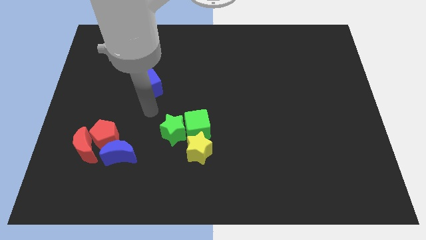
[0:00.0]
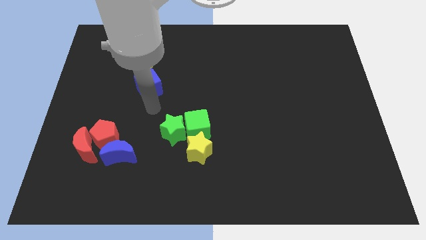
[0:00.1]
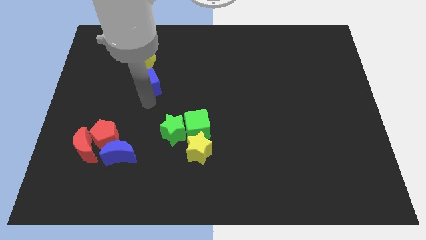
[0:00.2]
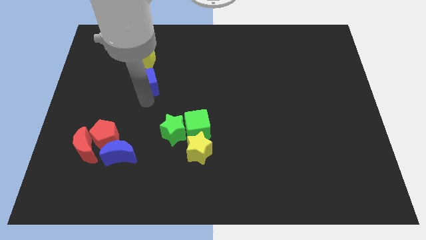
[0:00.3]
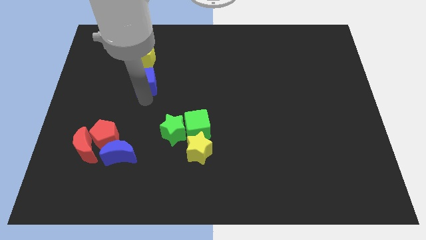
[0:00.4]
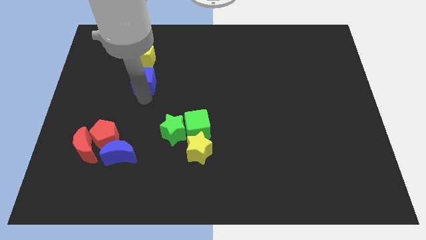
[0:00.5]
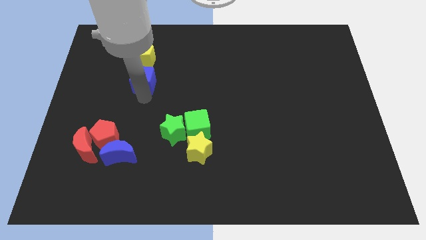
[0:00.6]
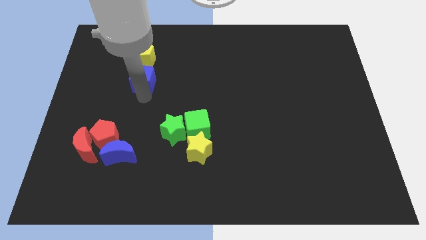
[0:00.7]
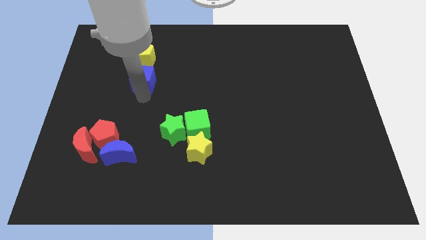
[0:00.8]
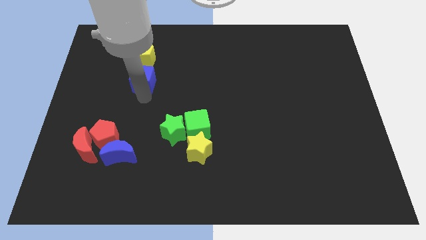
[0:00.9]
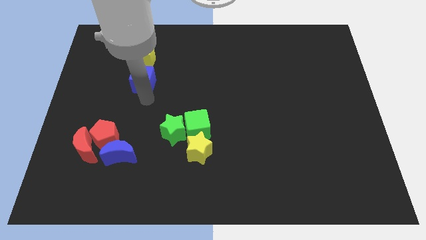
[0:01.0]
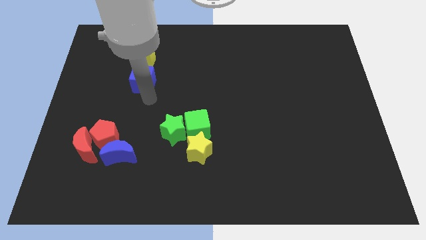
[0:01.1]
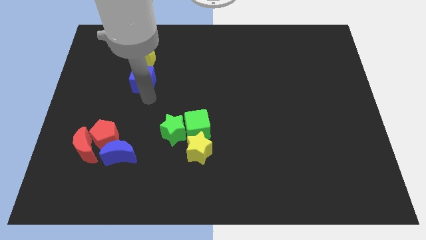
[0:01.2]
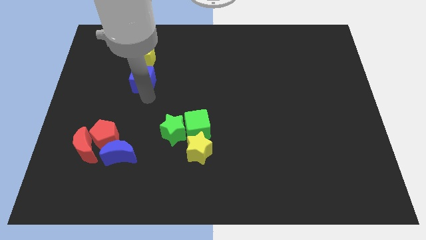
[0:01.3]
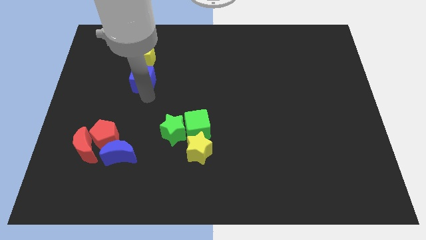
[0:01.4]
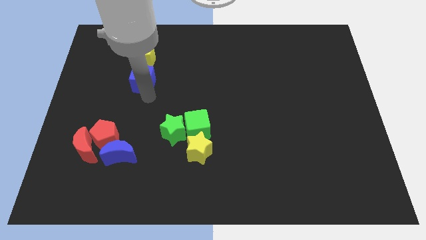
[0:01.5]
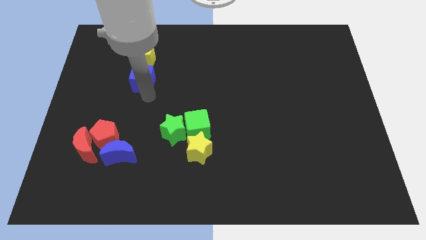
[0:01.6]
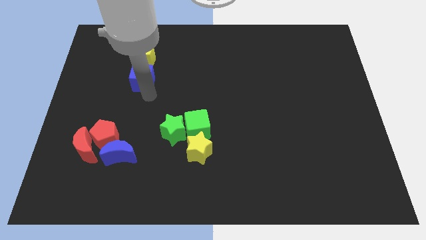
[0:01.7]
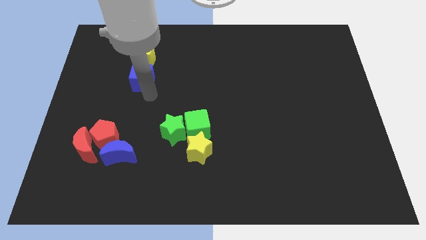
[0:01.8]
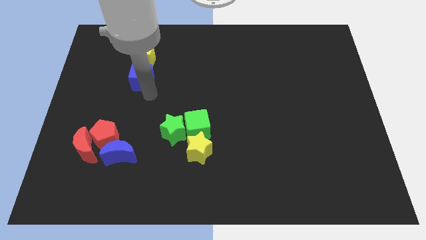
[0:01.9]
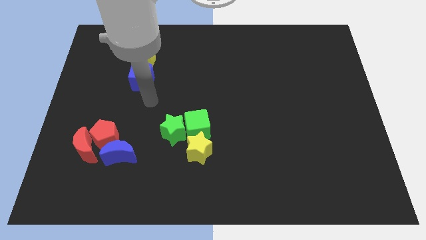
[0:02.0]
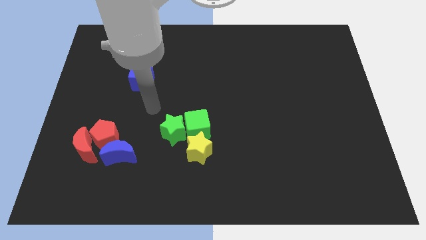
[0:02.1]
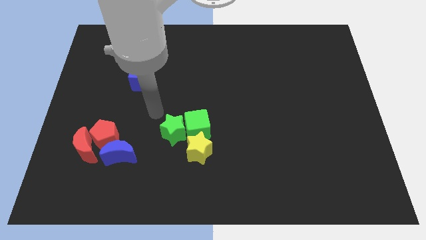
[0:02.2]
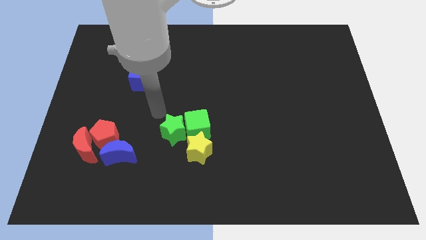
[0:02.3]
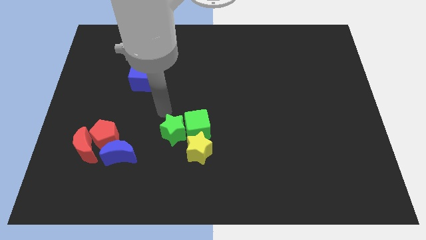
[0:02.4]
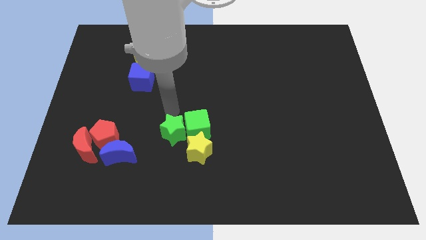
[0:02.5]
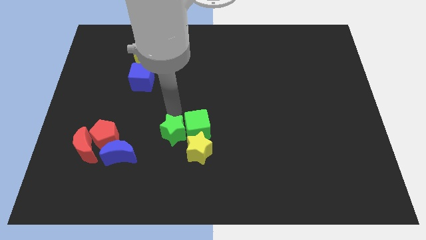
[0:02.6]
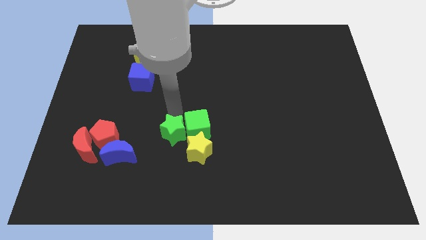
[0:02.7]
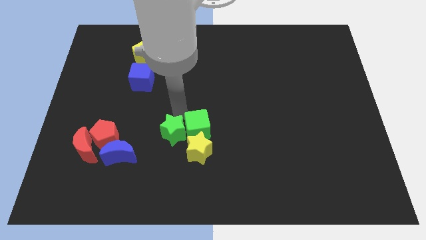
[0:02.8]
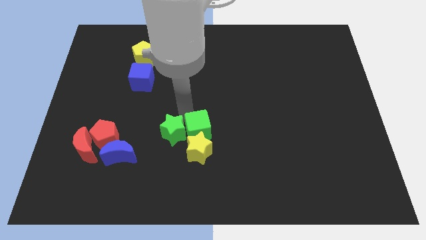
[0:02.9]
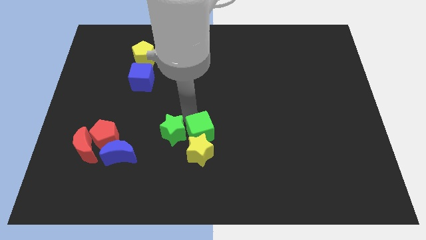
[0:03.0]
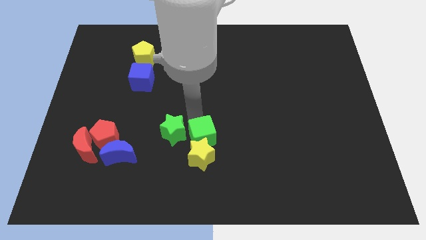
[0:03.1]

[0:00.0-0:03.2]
push the green cube into the yellow star

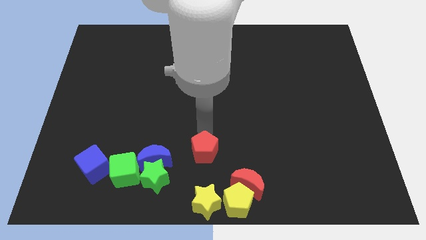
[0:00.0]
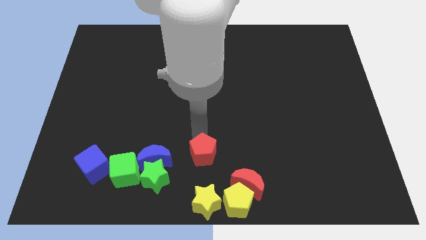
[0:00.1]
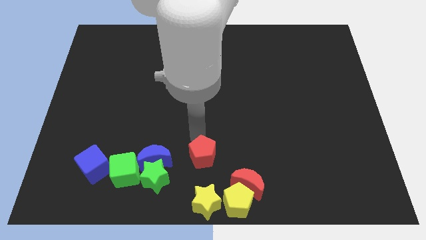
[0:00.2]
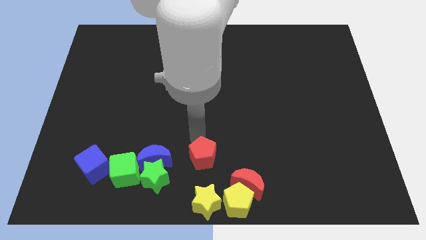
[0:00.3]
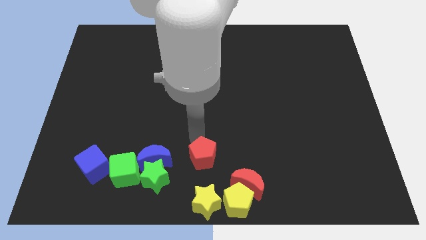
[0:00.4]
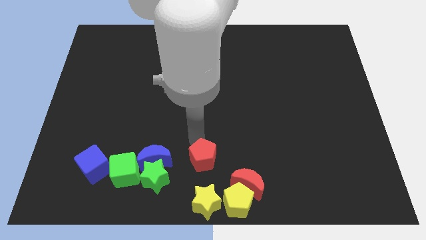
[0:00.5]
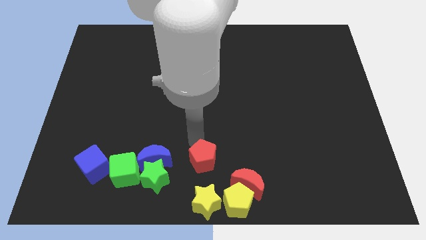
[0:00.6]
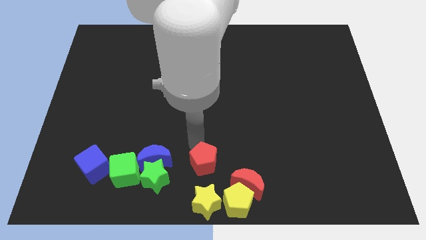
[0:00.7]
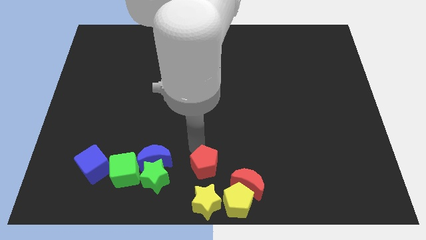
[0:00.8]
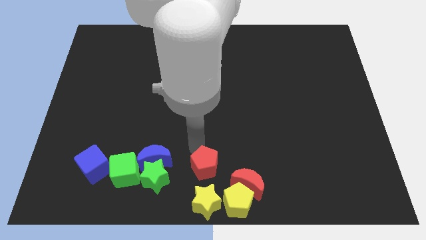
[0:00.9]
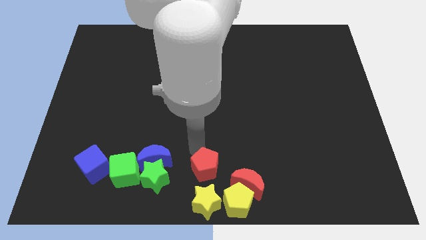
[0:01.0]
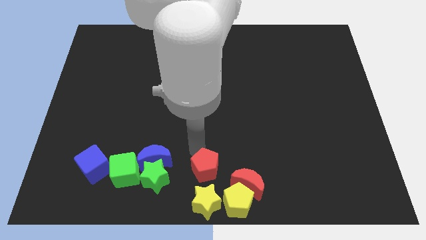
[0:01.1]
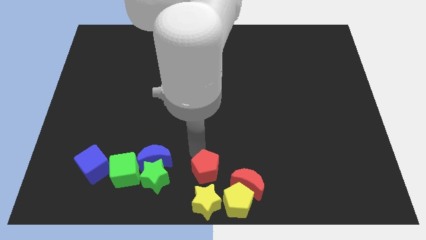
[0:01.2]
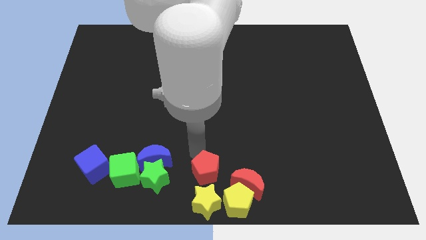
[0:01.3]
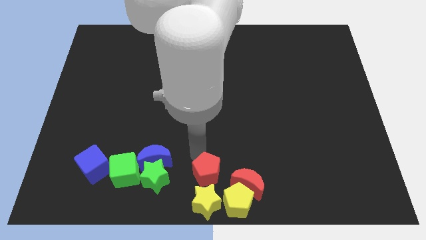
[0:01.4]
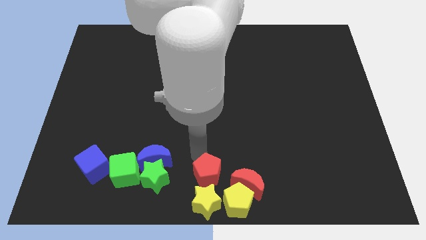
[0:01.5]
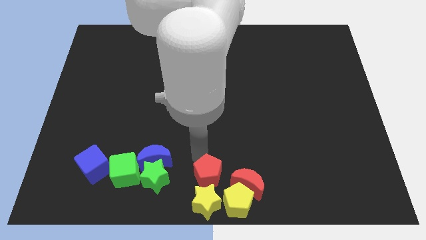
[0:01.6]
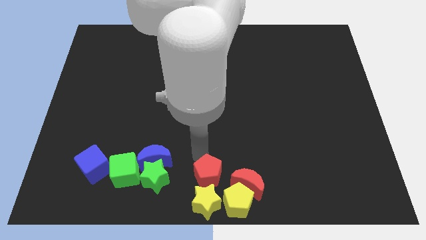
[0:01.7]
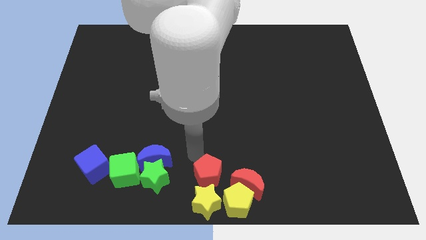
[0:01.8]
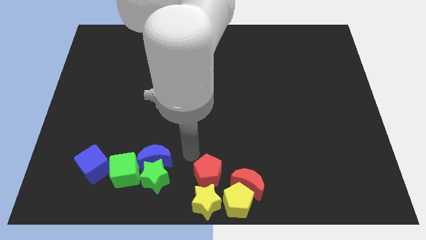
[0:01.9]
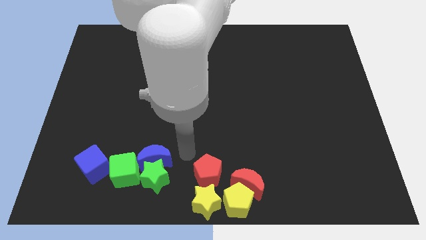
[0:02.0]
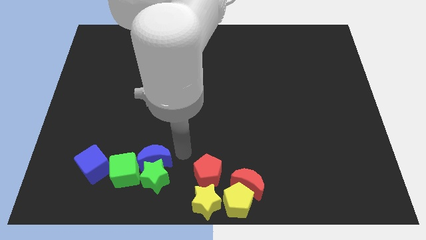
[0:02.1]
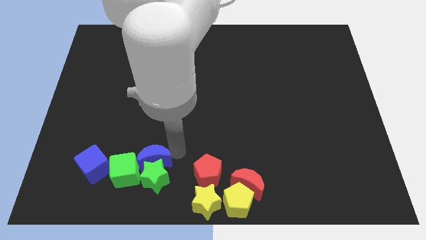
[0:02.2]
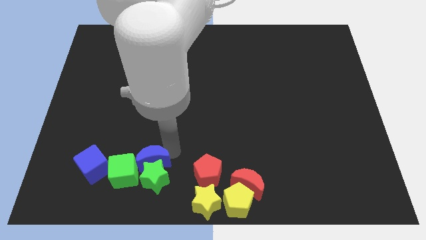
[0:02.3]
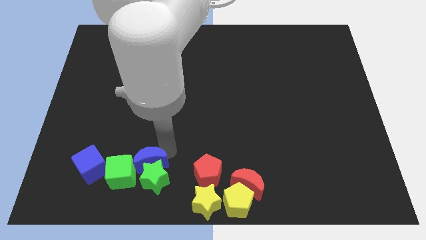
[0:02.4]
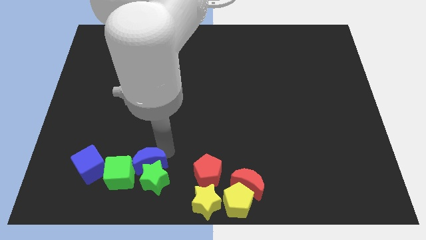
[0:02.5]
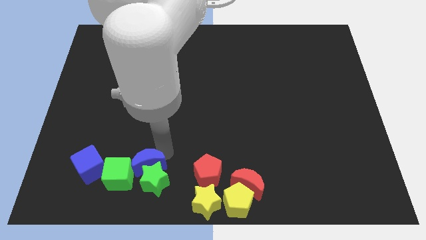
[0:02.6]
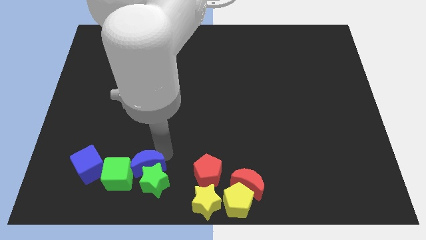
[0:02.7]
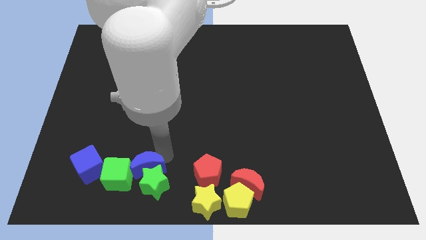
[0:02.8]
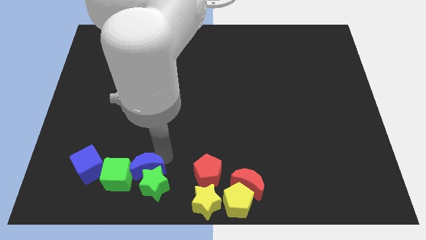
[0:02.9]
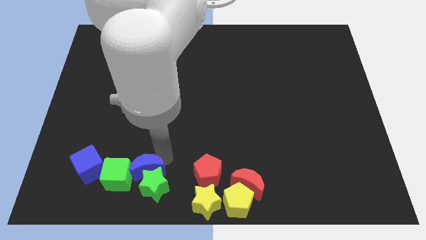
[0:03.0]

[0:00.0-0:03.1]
place the red pentagon to the top of yellow star

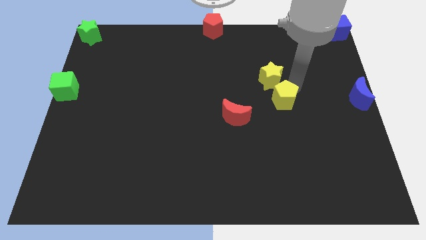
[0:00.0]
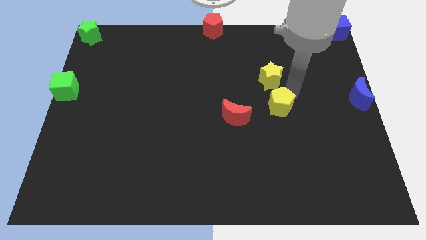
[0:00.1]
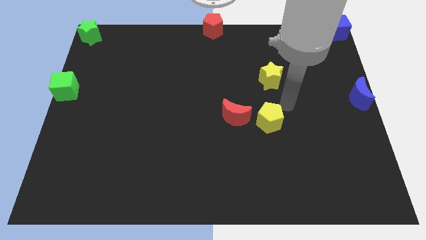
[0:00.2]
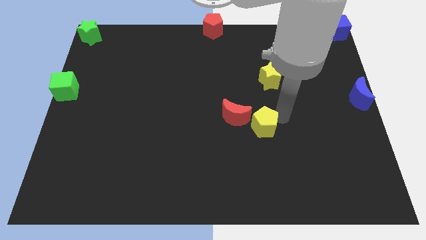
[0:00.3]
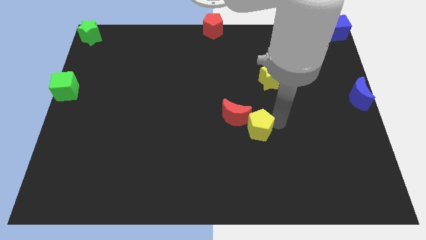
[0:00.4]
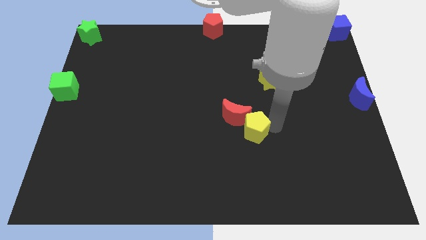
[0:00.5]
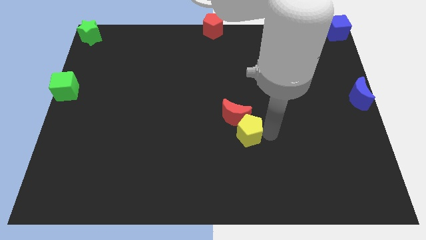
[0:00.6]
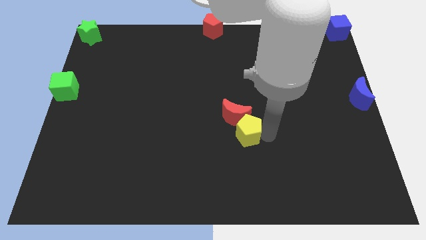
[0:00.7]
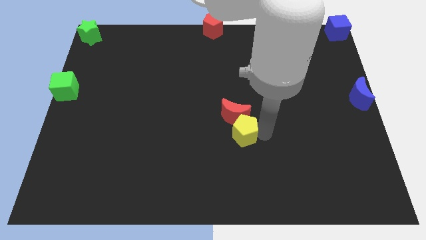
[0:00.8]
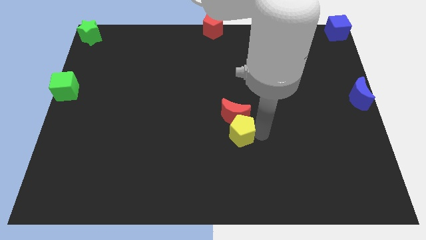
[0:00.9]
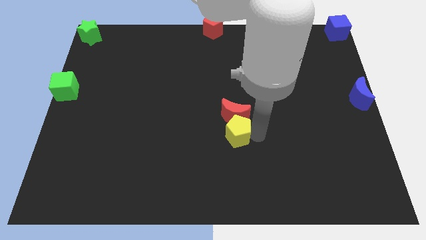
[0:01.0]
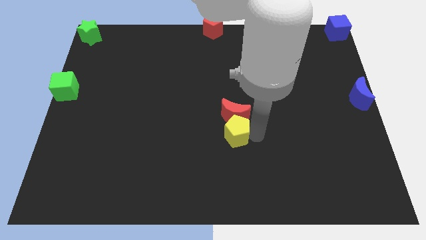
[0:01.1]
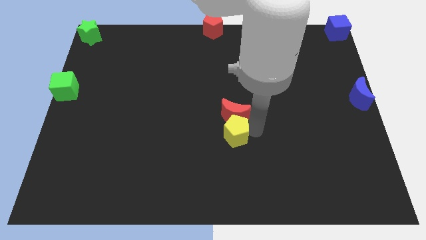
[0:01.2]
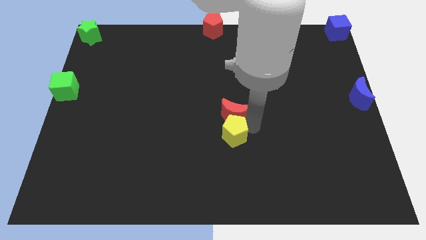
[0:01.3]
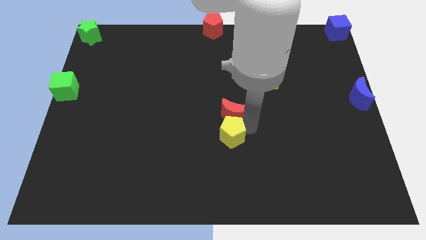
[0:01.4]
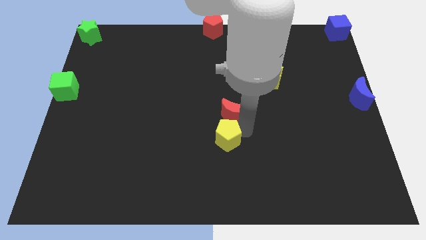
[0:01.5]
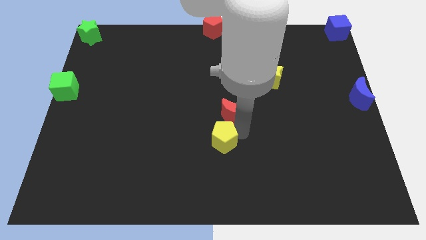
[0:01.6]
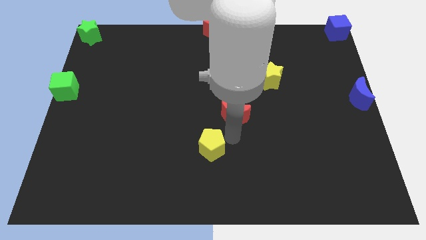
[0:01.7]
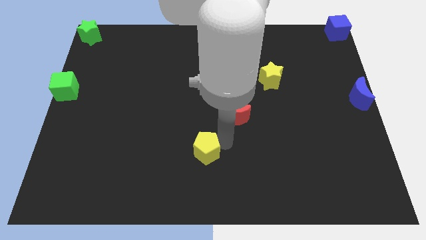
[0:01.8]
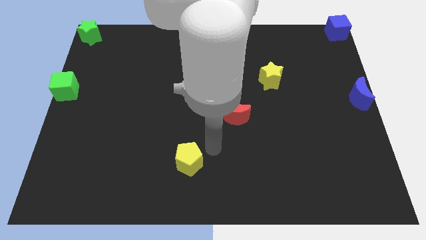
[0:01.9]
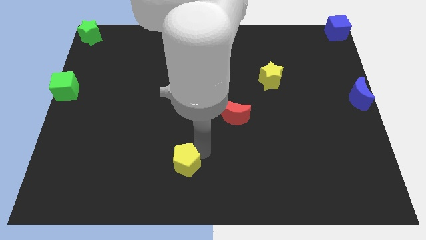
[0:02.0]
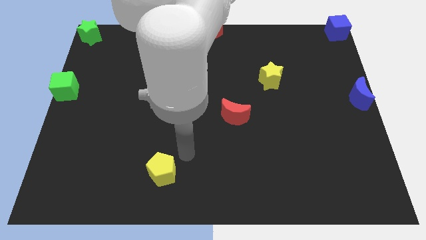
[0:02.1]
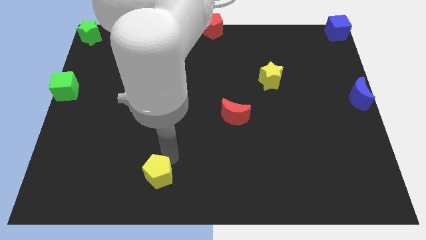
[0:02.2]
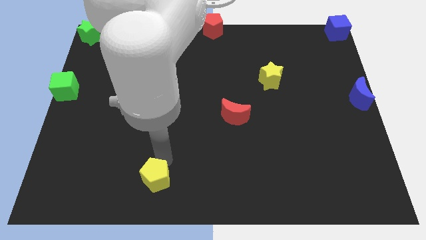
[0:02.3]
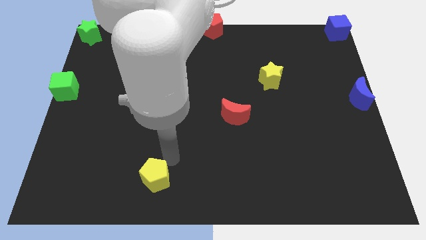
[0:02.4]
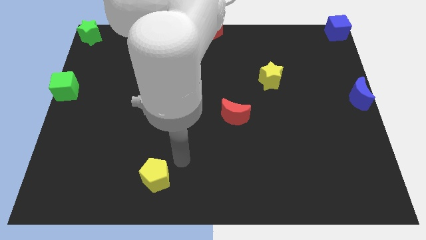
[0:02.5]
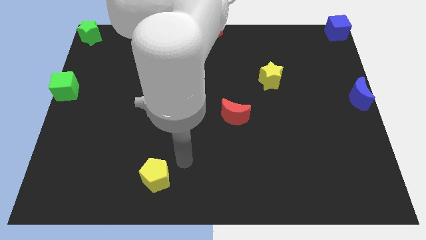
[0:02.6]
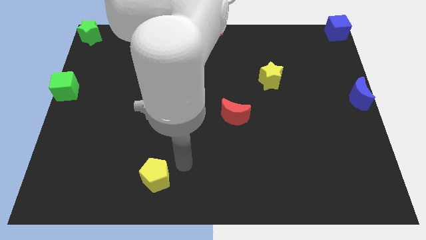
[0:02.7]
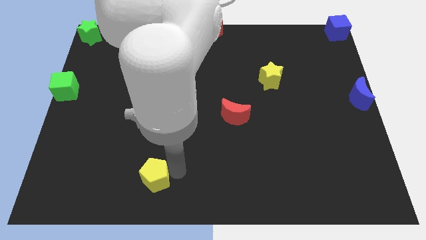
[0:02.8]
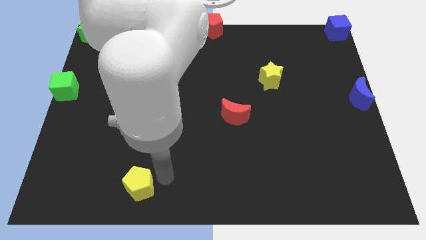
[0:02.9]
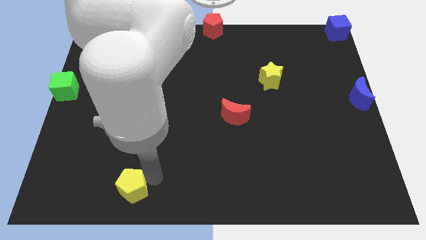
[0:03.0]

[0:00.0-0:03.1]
move the yellow pentagon to the bottom center
